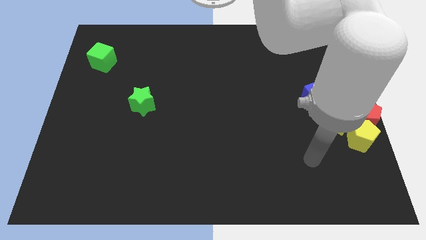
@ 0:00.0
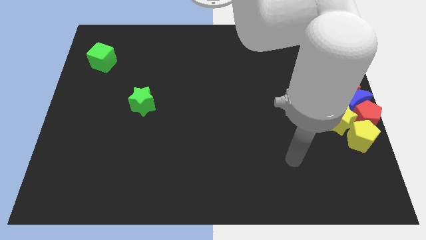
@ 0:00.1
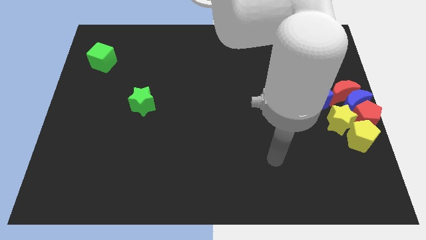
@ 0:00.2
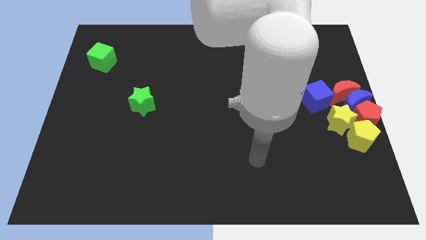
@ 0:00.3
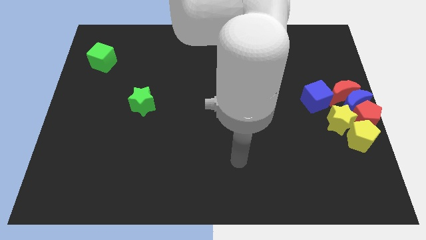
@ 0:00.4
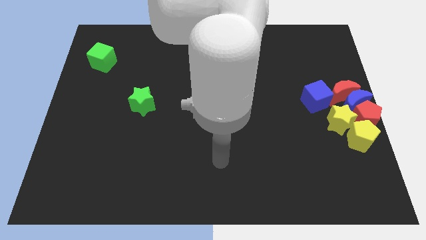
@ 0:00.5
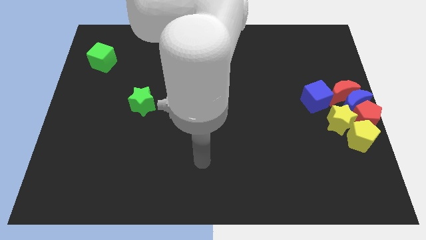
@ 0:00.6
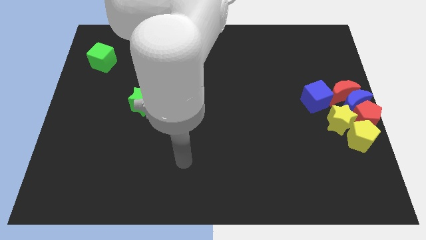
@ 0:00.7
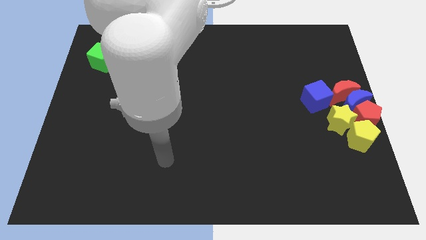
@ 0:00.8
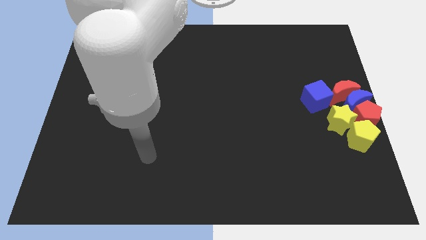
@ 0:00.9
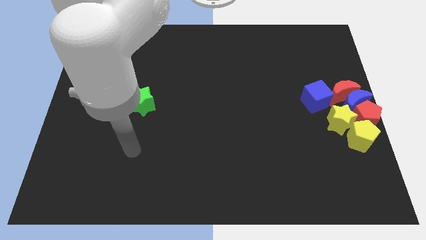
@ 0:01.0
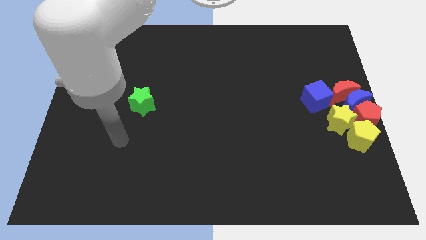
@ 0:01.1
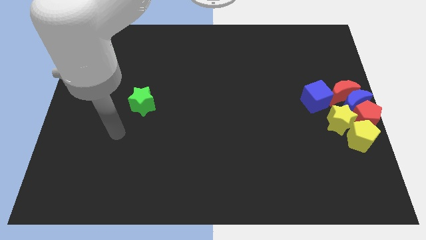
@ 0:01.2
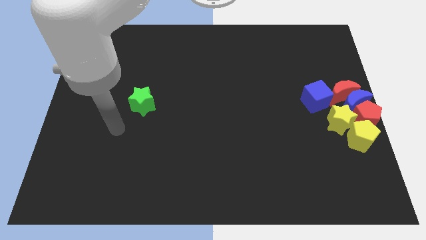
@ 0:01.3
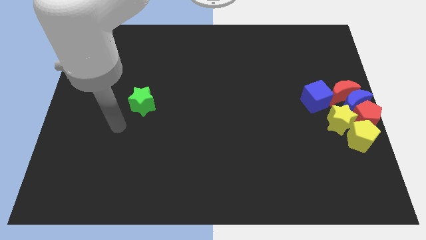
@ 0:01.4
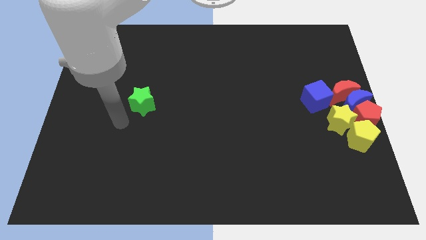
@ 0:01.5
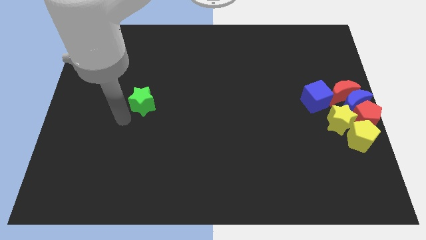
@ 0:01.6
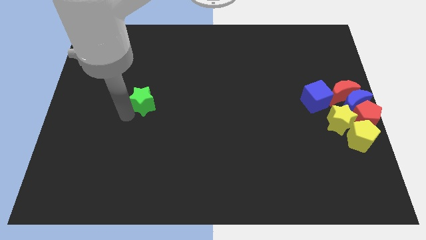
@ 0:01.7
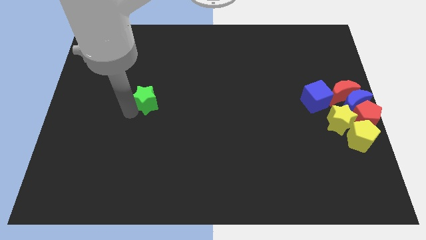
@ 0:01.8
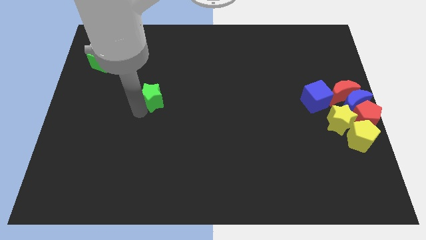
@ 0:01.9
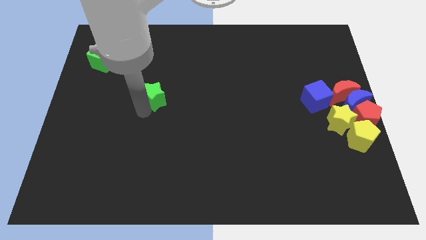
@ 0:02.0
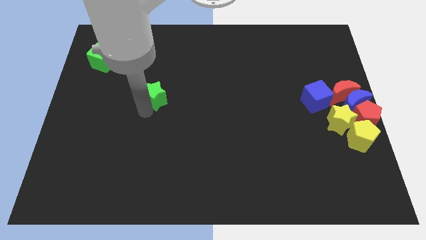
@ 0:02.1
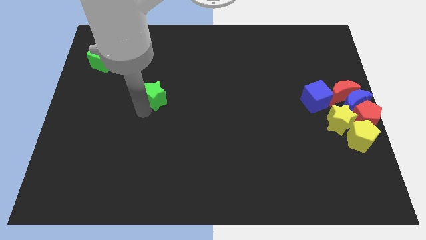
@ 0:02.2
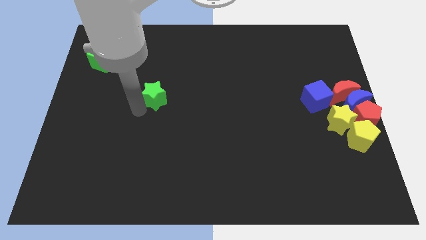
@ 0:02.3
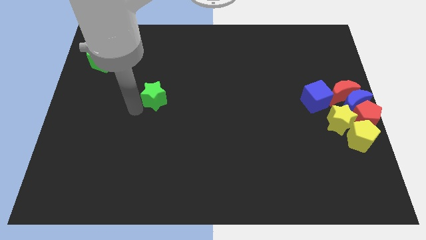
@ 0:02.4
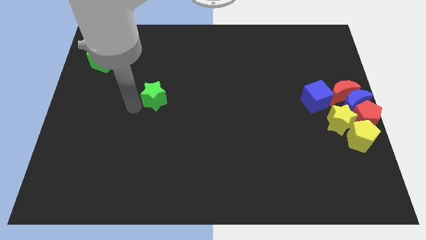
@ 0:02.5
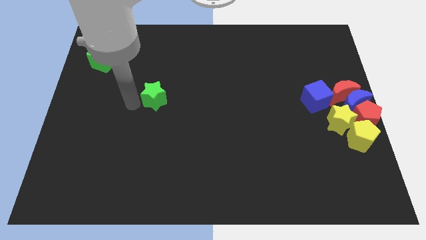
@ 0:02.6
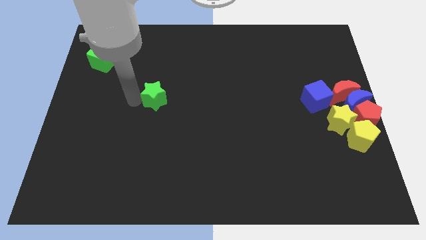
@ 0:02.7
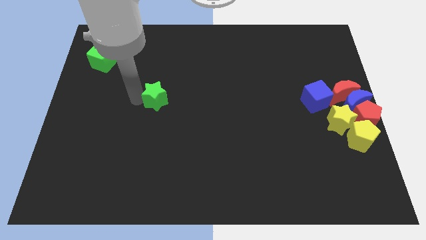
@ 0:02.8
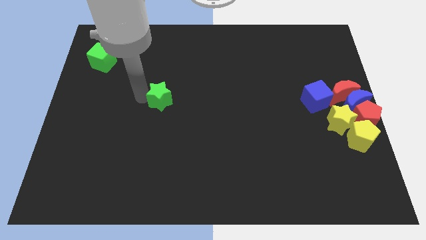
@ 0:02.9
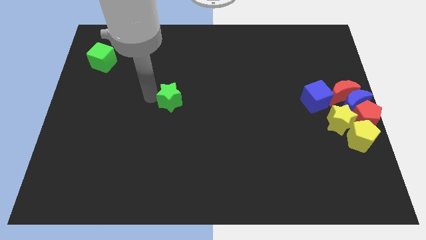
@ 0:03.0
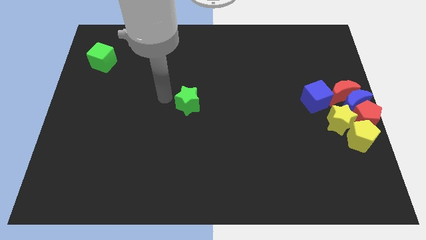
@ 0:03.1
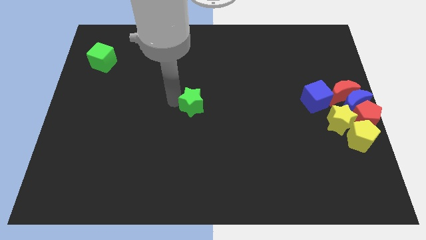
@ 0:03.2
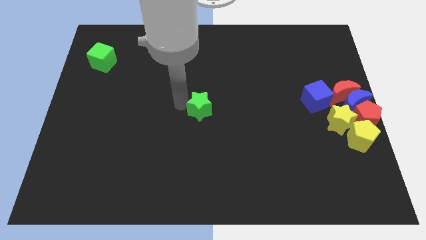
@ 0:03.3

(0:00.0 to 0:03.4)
move the green star towards the right of the board

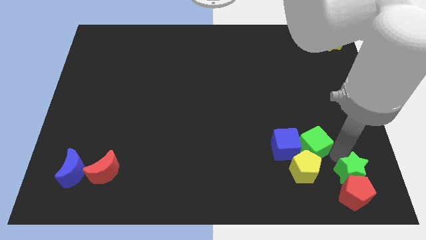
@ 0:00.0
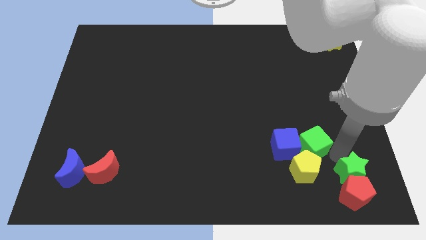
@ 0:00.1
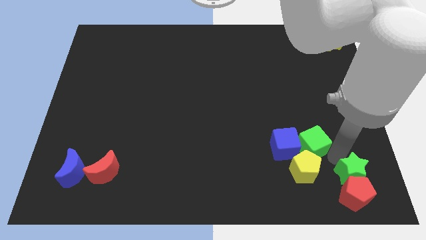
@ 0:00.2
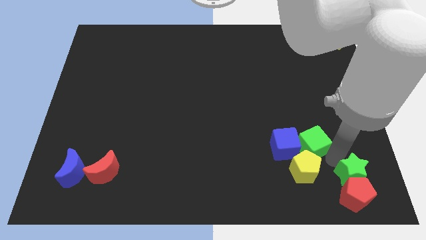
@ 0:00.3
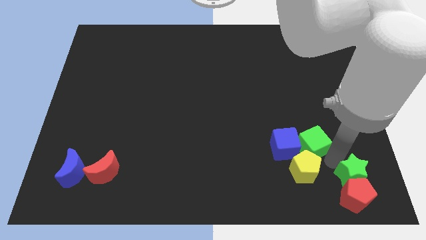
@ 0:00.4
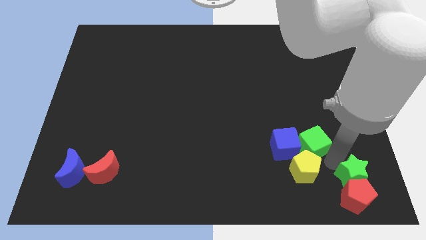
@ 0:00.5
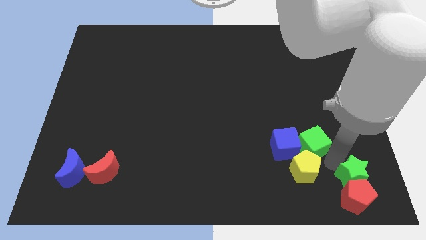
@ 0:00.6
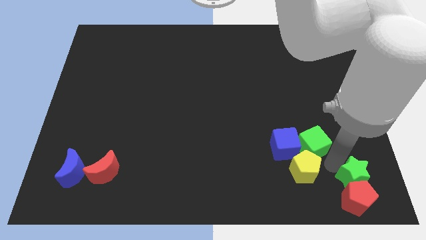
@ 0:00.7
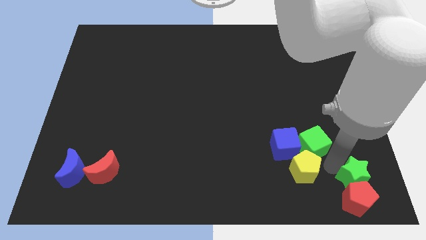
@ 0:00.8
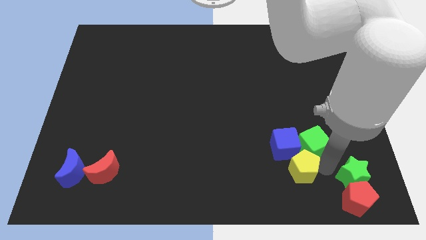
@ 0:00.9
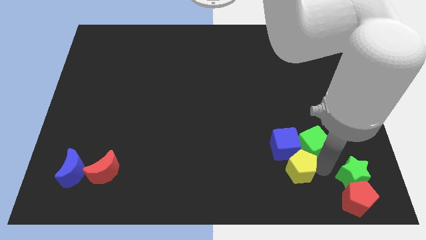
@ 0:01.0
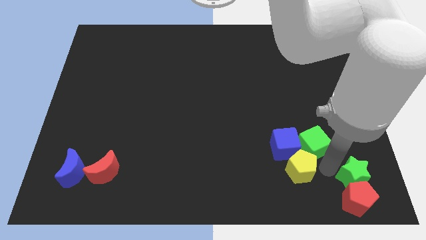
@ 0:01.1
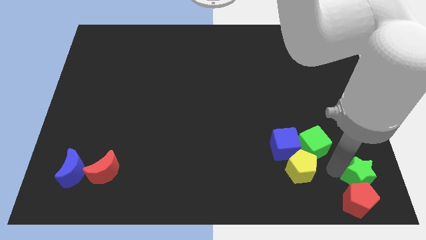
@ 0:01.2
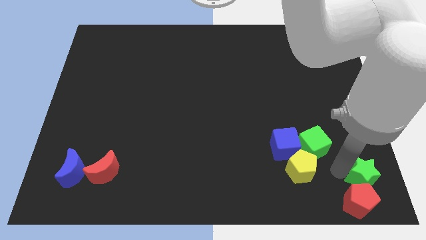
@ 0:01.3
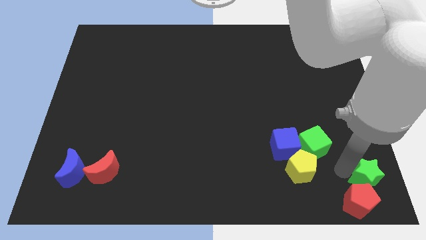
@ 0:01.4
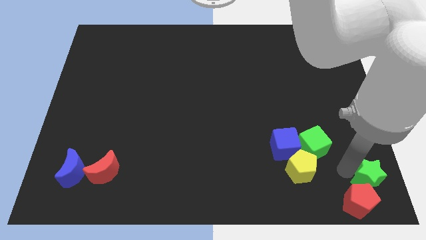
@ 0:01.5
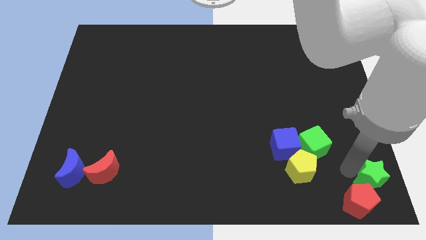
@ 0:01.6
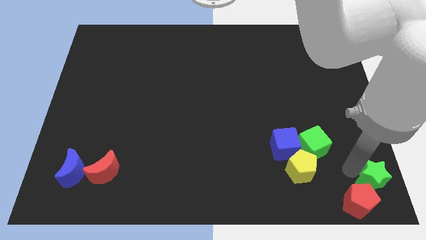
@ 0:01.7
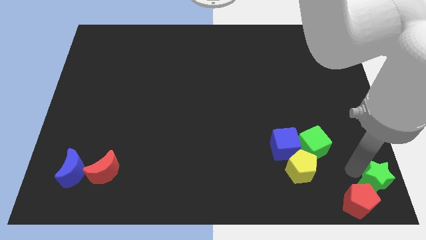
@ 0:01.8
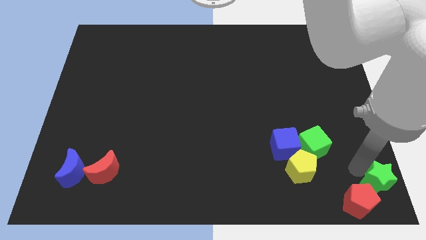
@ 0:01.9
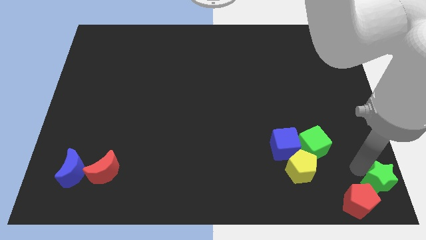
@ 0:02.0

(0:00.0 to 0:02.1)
push the green star and red pentagon towards the bottom right corner

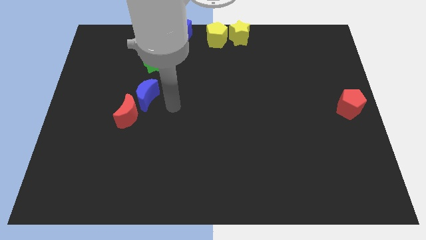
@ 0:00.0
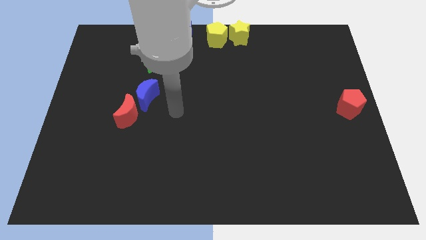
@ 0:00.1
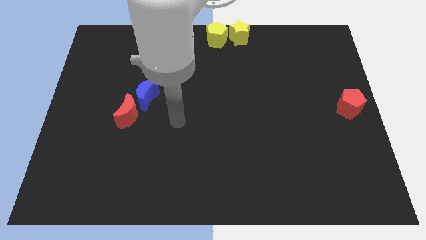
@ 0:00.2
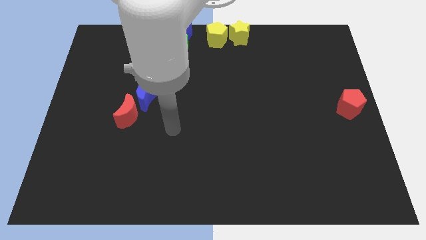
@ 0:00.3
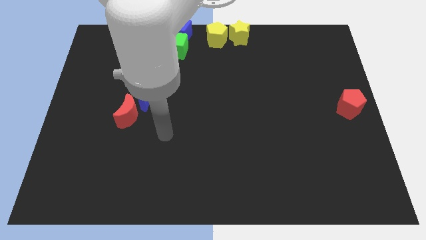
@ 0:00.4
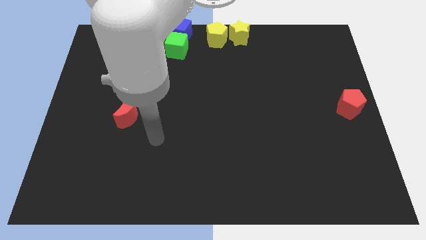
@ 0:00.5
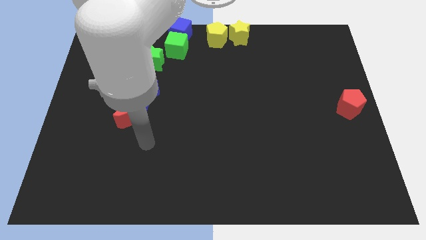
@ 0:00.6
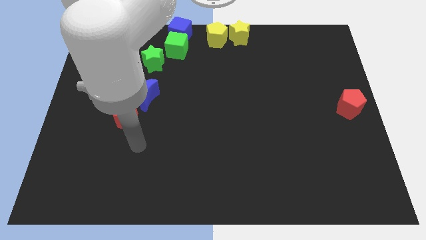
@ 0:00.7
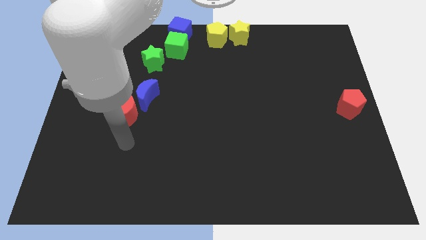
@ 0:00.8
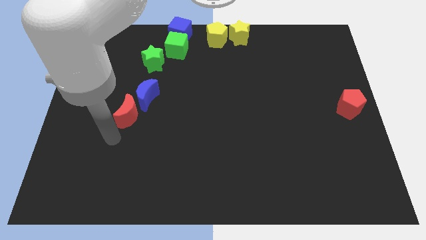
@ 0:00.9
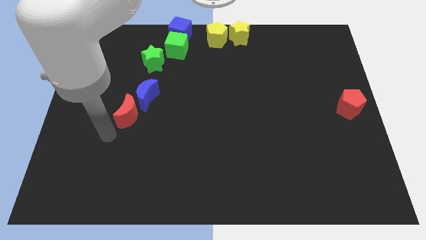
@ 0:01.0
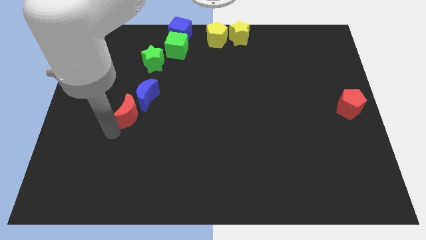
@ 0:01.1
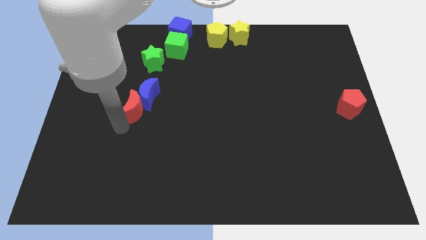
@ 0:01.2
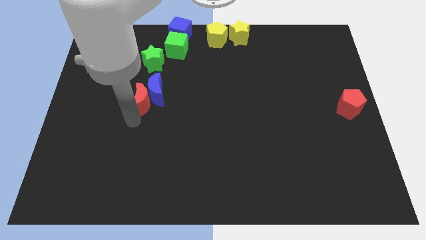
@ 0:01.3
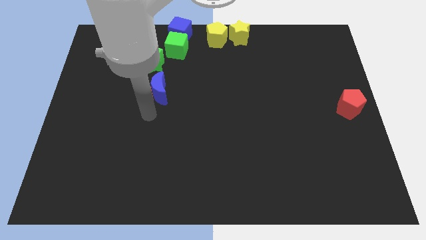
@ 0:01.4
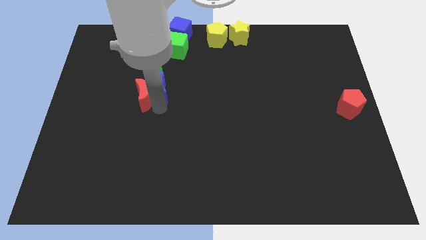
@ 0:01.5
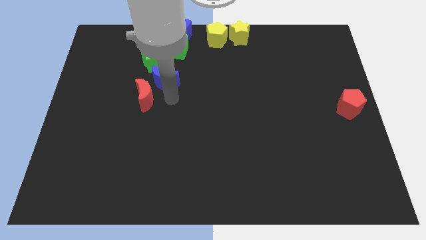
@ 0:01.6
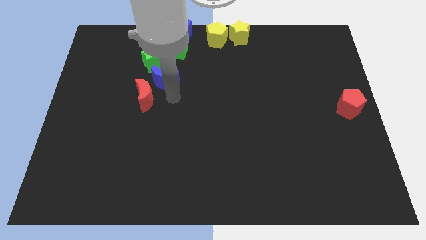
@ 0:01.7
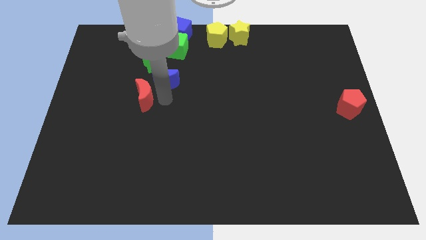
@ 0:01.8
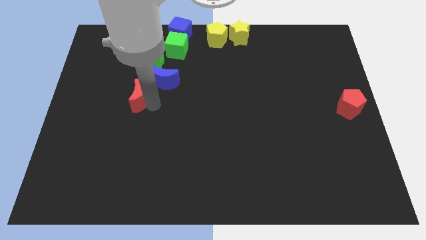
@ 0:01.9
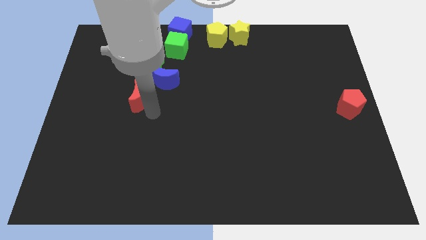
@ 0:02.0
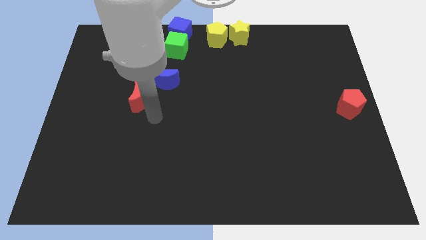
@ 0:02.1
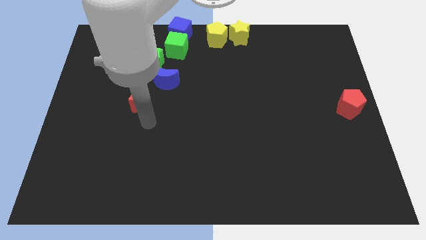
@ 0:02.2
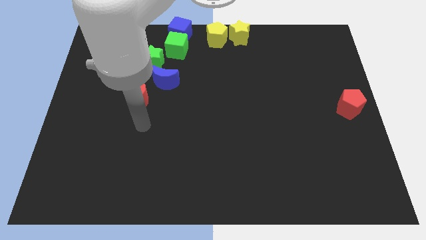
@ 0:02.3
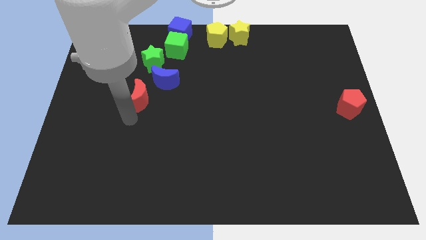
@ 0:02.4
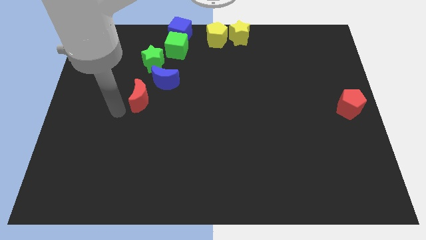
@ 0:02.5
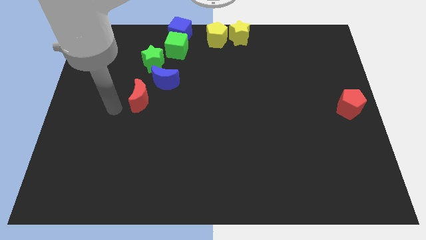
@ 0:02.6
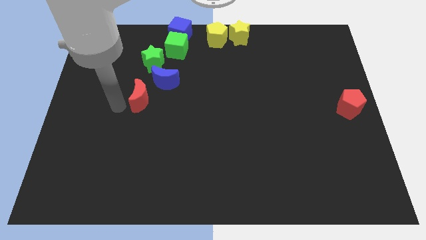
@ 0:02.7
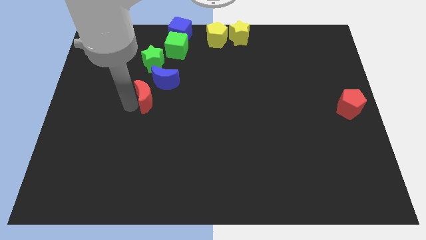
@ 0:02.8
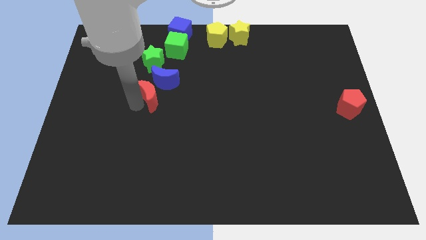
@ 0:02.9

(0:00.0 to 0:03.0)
separate the red moon and the blue moon

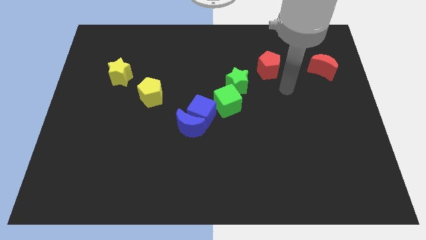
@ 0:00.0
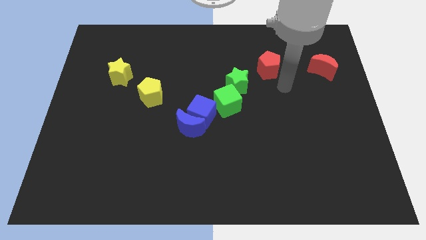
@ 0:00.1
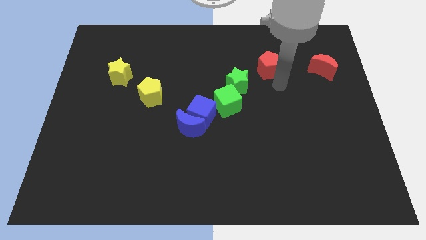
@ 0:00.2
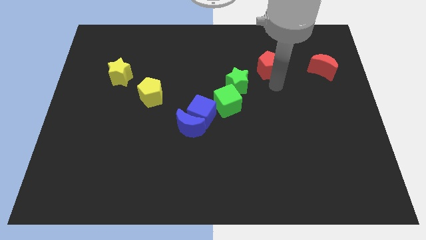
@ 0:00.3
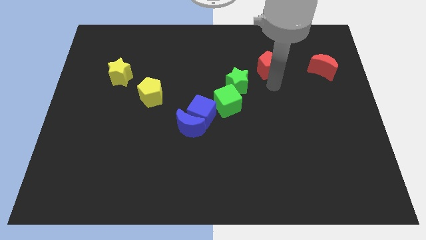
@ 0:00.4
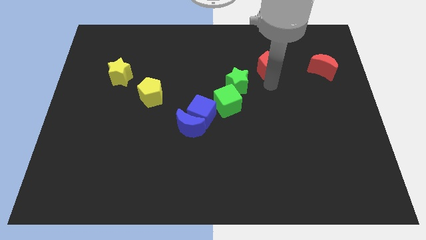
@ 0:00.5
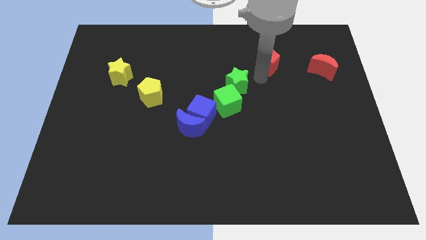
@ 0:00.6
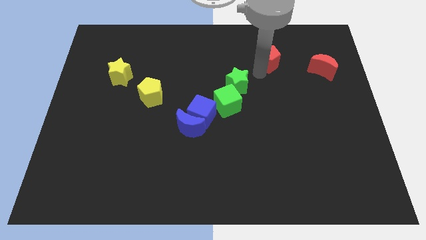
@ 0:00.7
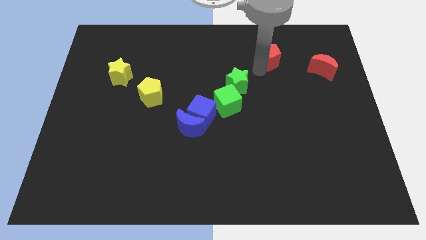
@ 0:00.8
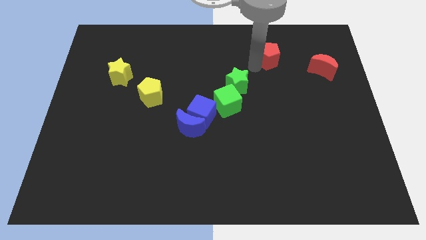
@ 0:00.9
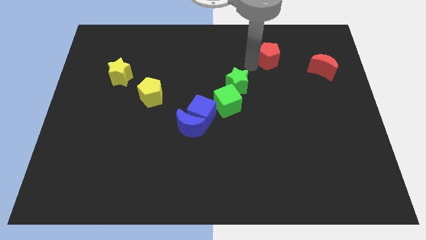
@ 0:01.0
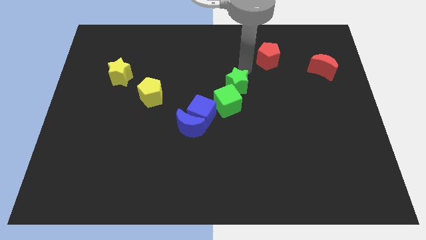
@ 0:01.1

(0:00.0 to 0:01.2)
move the red pentagon slightly towards the diagonal top right corner of the green star
